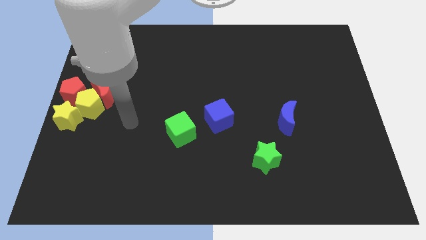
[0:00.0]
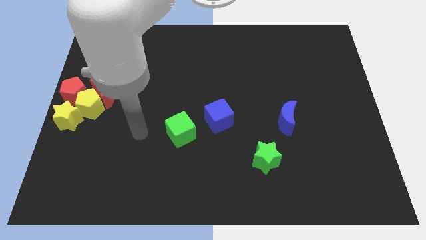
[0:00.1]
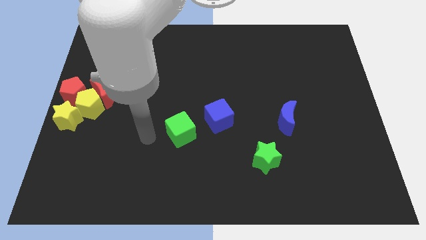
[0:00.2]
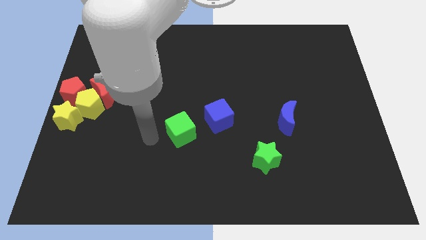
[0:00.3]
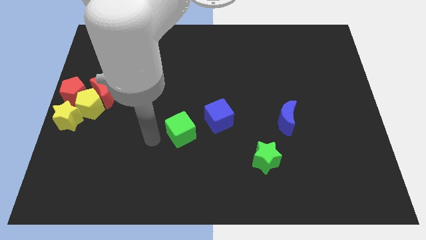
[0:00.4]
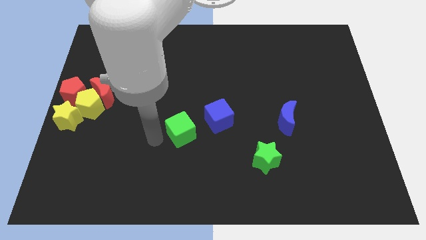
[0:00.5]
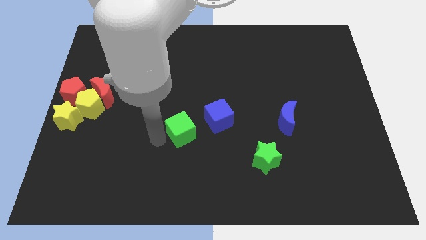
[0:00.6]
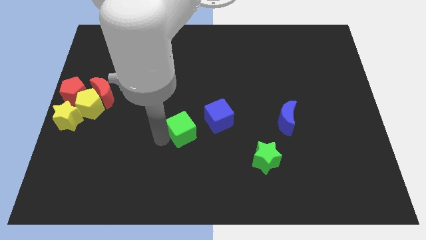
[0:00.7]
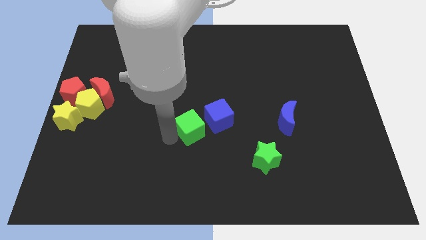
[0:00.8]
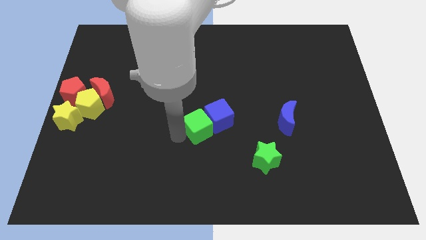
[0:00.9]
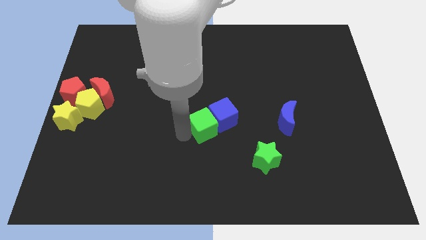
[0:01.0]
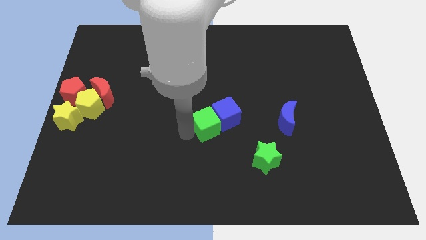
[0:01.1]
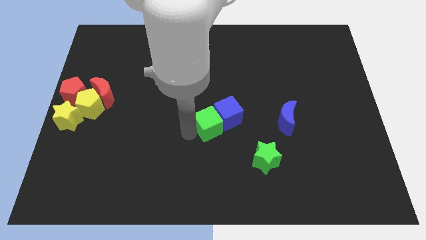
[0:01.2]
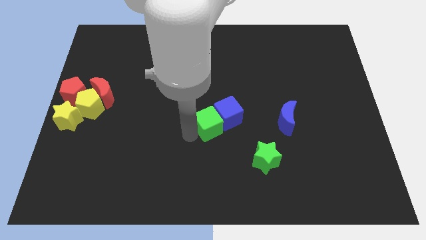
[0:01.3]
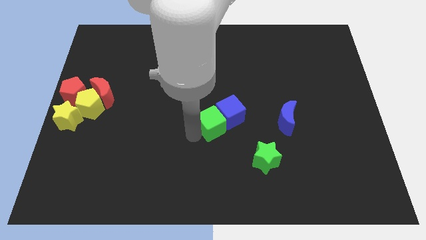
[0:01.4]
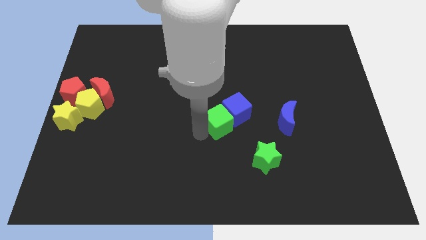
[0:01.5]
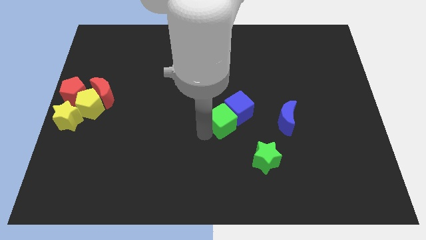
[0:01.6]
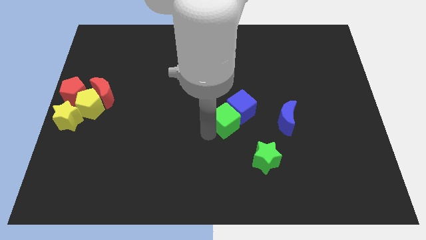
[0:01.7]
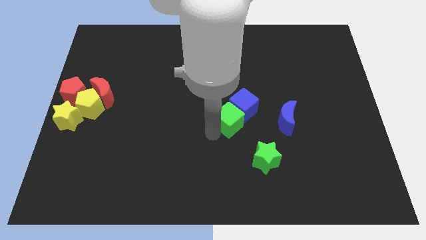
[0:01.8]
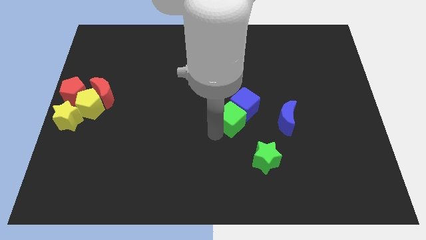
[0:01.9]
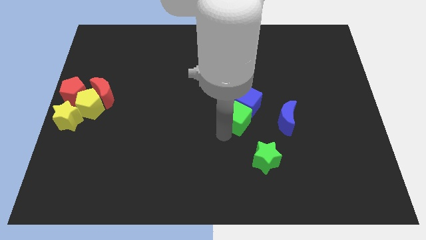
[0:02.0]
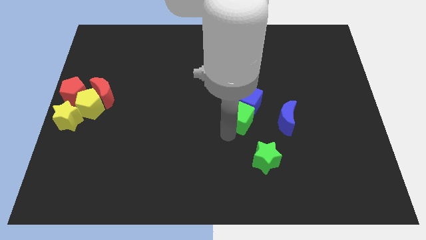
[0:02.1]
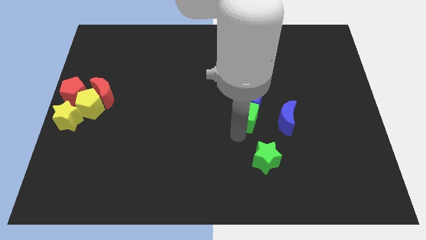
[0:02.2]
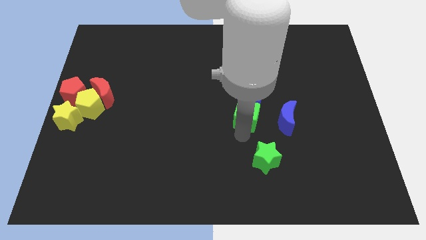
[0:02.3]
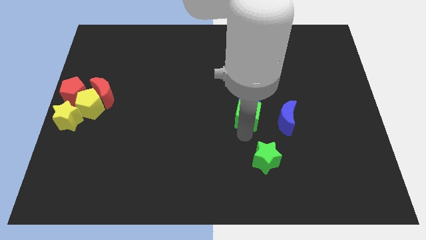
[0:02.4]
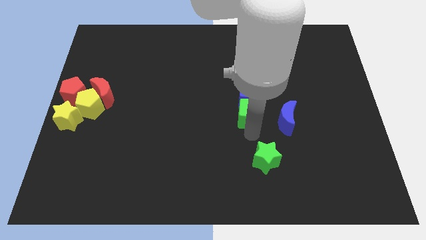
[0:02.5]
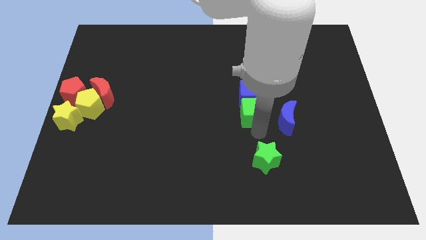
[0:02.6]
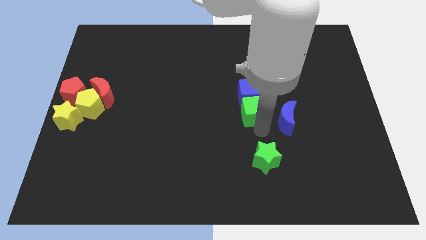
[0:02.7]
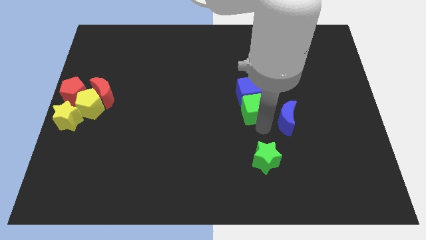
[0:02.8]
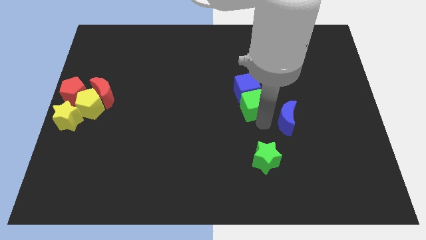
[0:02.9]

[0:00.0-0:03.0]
move the green cube along with blue cube left to the blue crescent

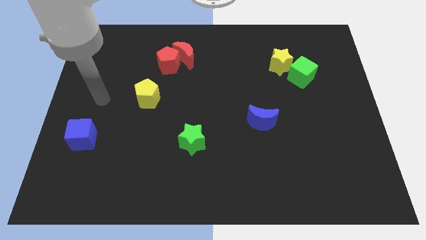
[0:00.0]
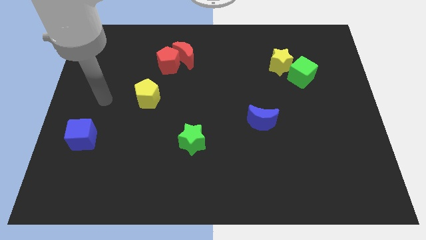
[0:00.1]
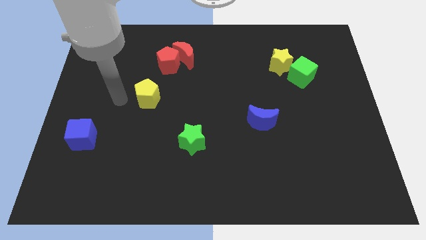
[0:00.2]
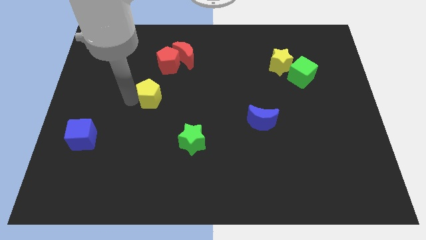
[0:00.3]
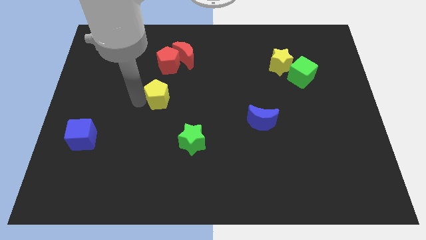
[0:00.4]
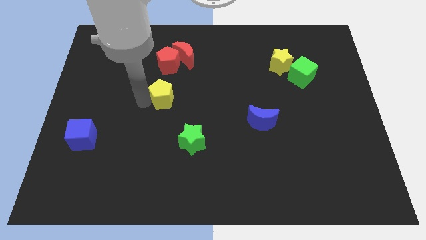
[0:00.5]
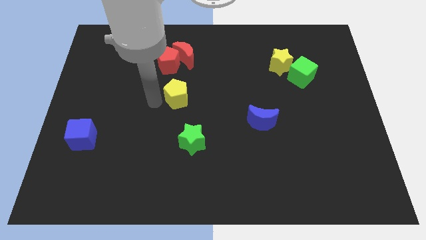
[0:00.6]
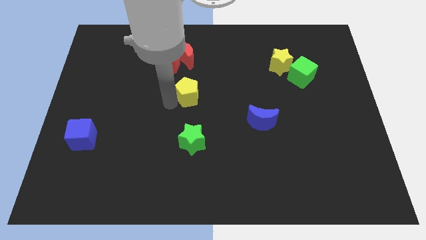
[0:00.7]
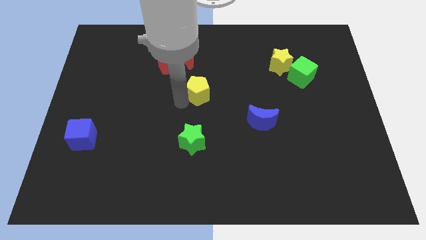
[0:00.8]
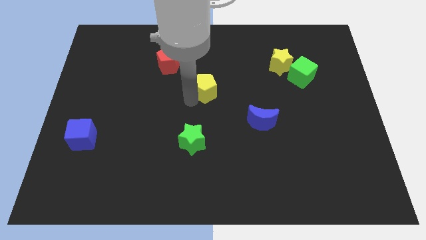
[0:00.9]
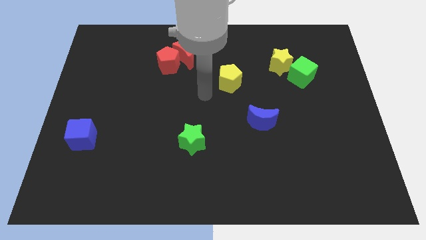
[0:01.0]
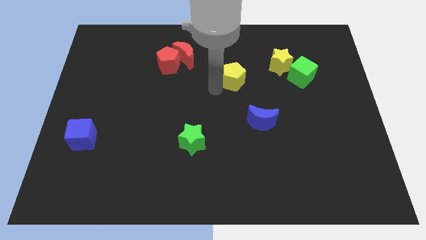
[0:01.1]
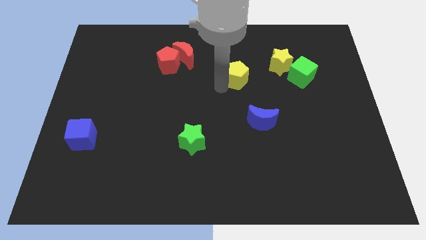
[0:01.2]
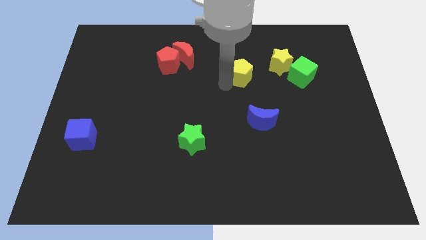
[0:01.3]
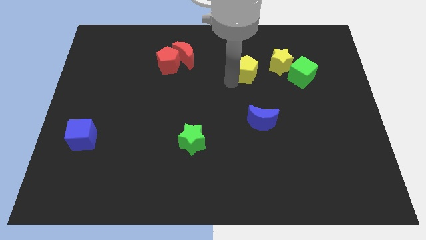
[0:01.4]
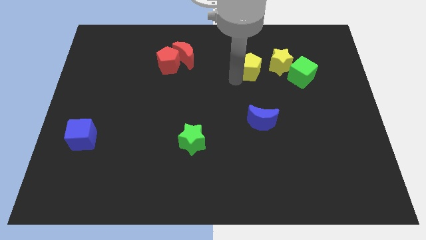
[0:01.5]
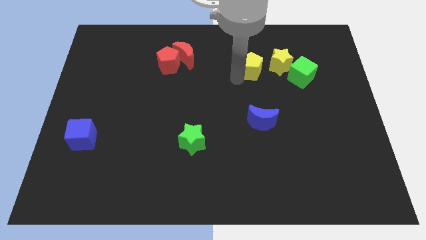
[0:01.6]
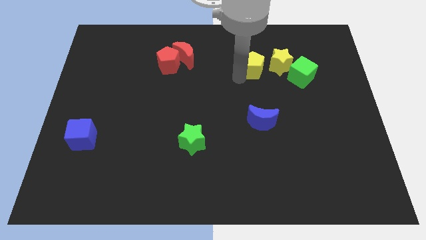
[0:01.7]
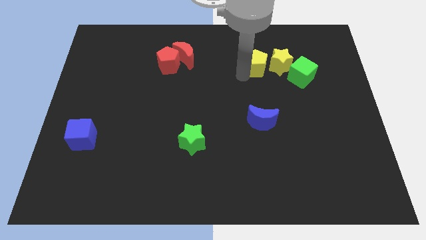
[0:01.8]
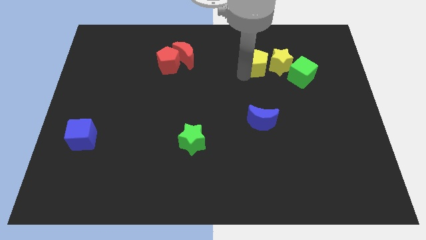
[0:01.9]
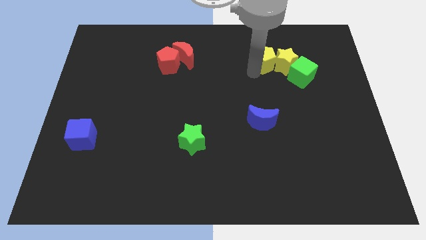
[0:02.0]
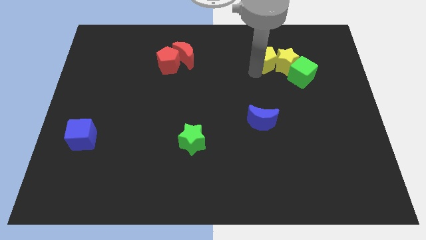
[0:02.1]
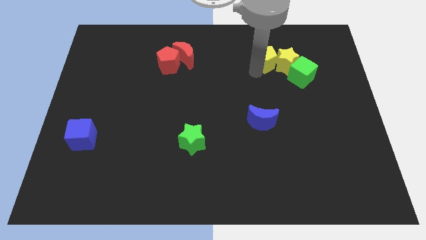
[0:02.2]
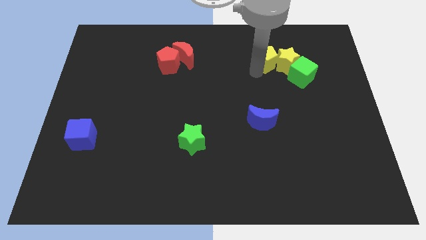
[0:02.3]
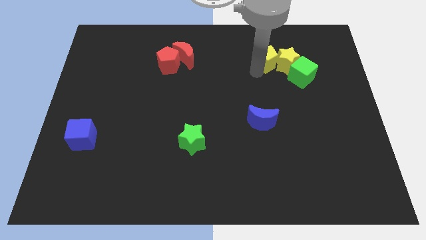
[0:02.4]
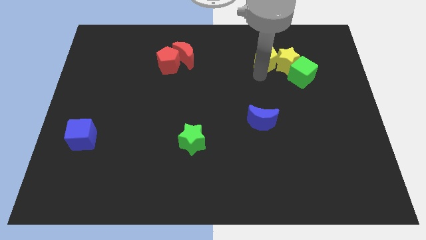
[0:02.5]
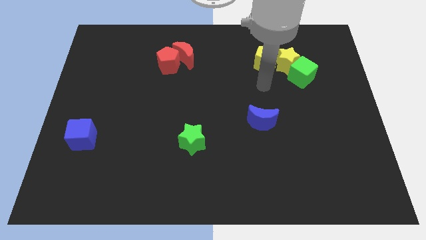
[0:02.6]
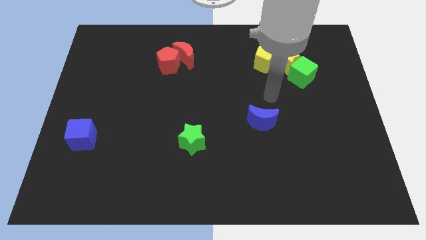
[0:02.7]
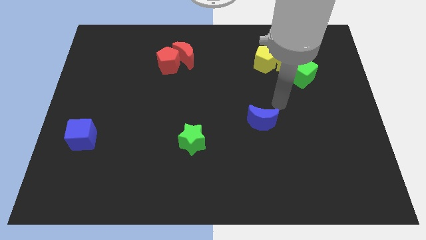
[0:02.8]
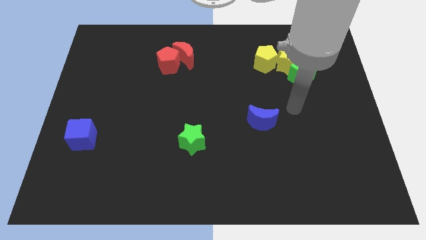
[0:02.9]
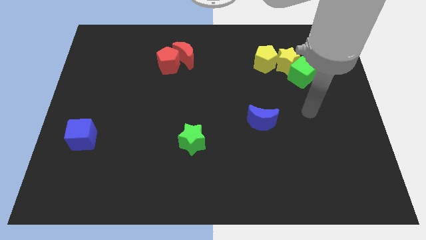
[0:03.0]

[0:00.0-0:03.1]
move the yellow pentagon into the yellow star

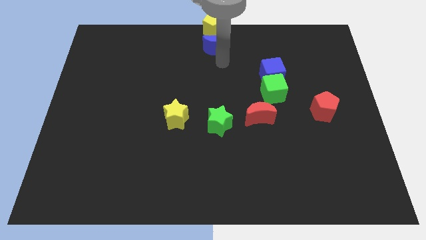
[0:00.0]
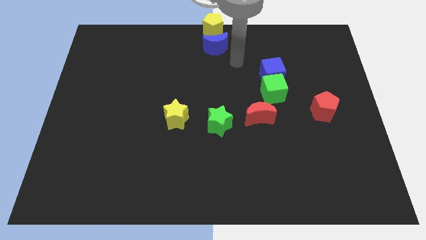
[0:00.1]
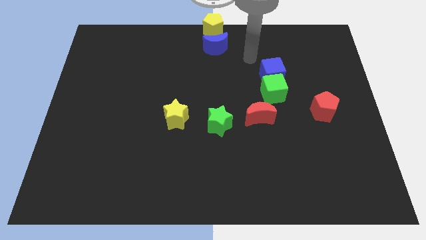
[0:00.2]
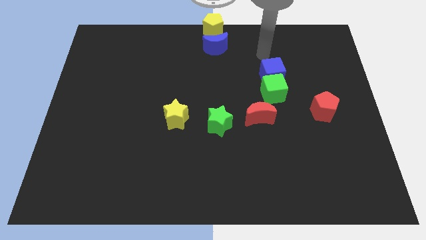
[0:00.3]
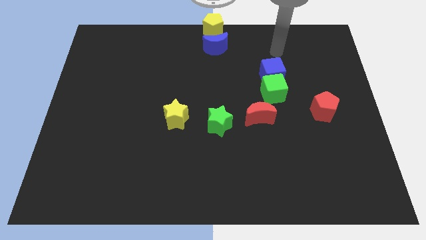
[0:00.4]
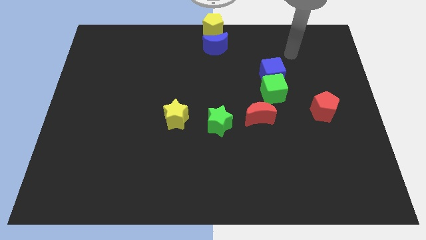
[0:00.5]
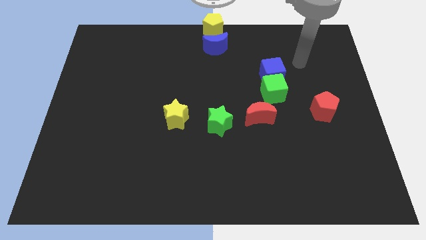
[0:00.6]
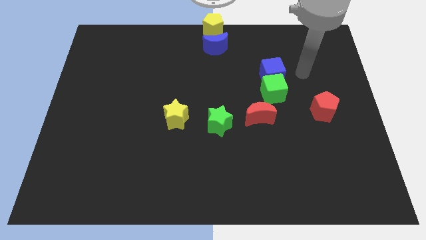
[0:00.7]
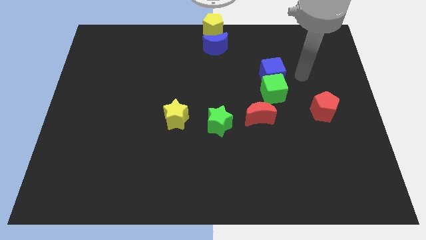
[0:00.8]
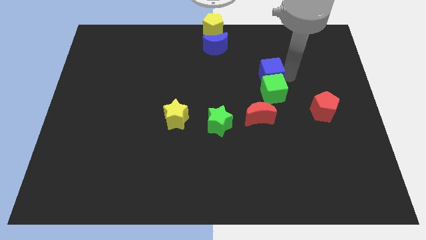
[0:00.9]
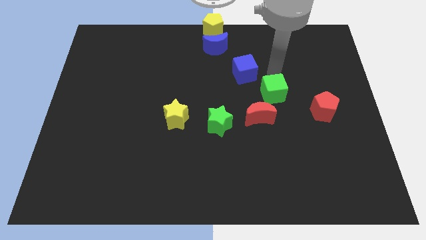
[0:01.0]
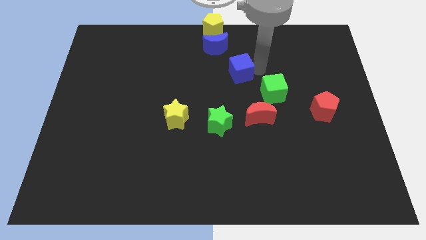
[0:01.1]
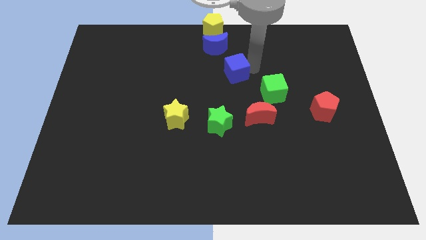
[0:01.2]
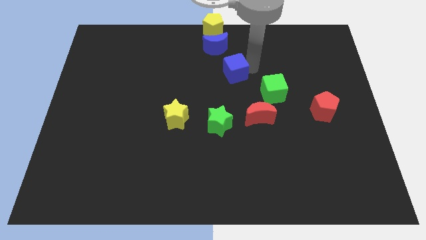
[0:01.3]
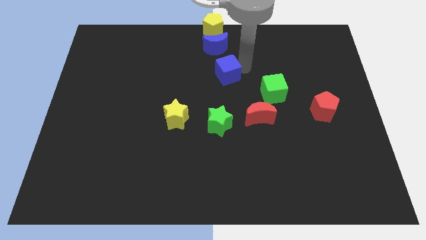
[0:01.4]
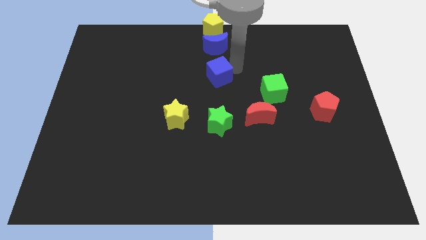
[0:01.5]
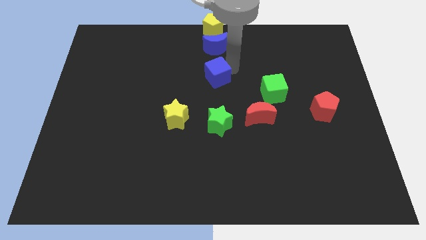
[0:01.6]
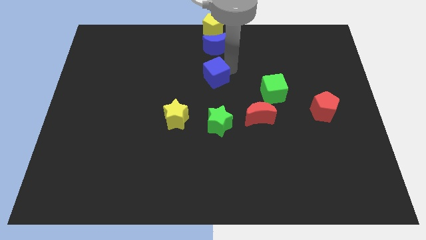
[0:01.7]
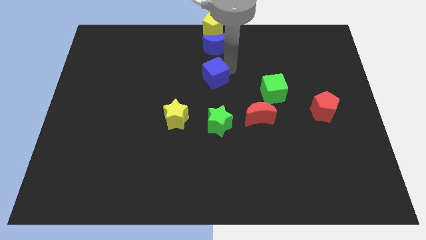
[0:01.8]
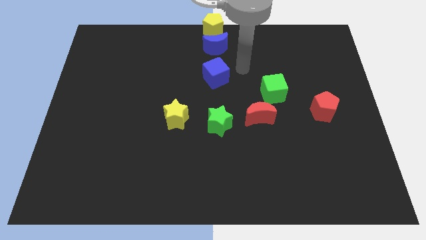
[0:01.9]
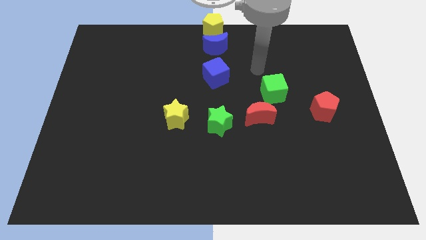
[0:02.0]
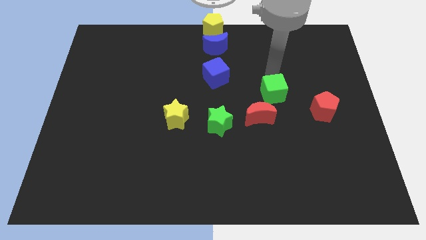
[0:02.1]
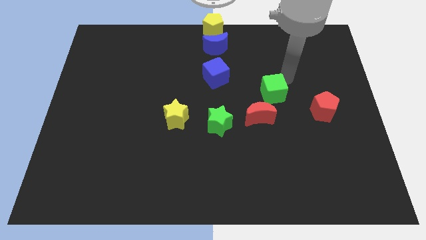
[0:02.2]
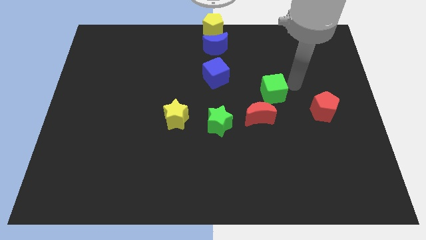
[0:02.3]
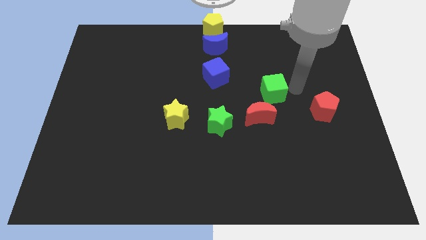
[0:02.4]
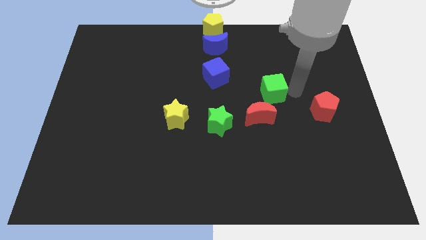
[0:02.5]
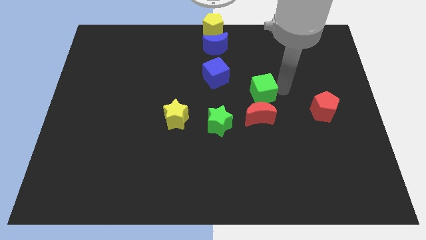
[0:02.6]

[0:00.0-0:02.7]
place the blue cube to the bottom of blue crescent

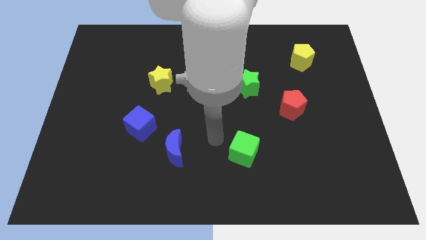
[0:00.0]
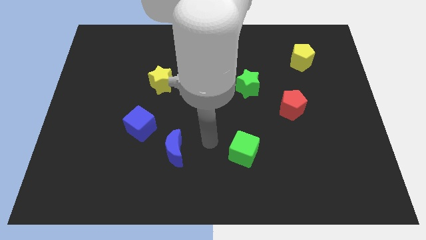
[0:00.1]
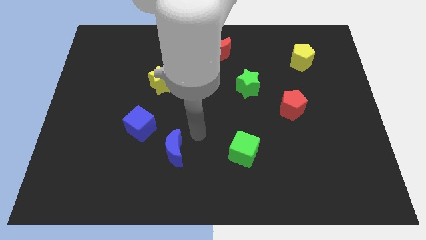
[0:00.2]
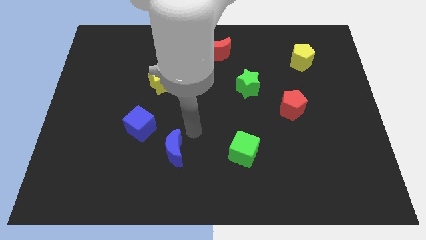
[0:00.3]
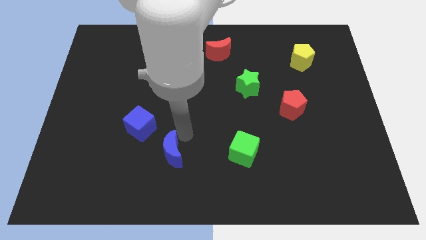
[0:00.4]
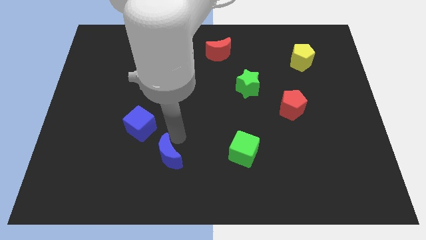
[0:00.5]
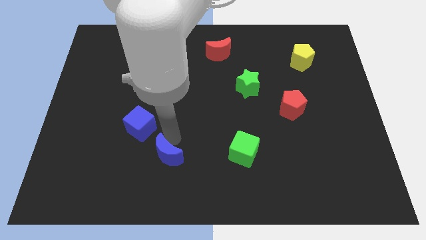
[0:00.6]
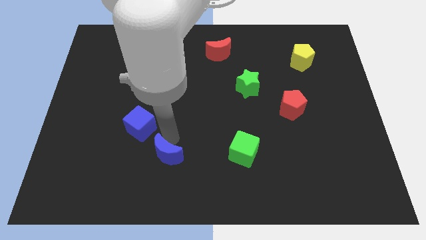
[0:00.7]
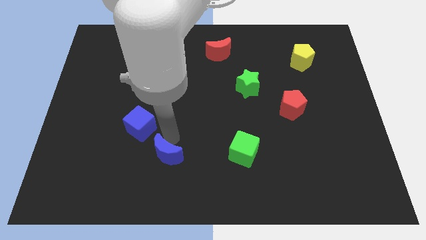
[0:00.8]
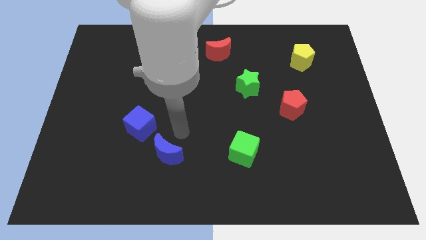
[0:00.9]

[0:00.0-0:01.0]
slightly move the blue crescent to the down
